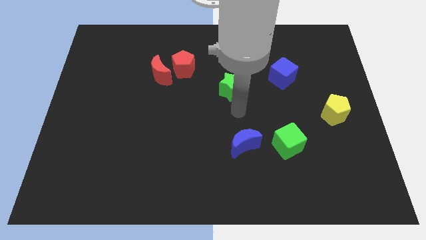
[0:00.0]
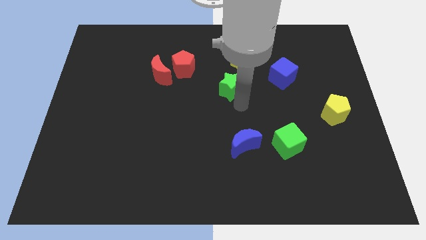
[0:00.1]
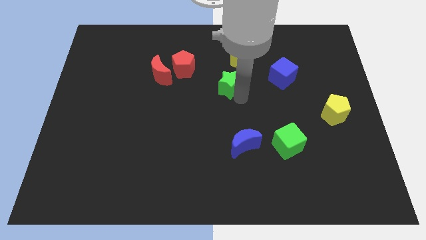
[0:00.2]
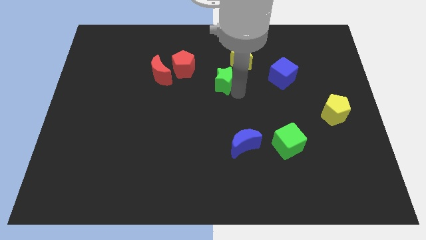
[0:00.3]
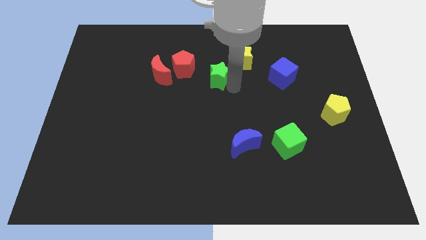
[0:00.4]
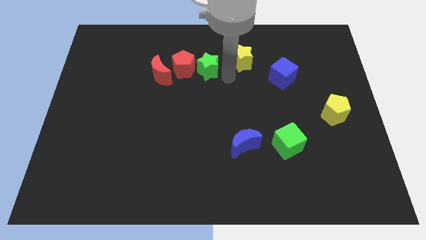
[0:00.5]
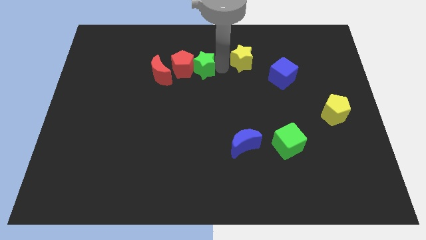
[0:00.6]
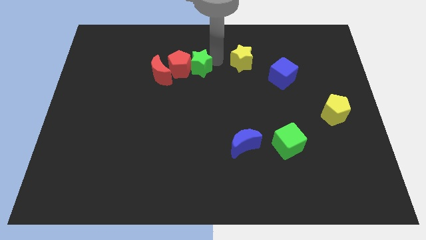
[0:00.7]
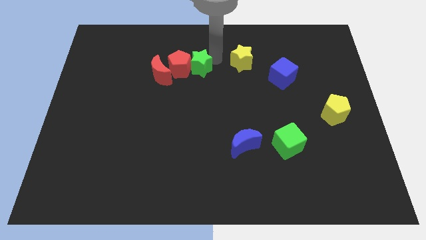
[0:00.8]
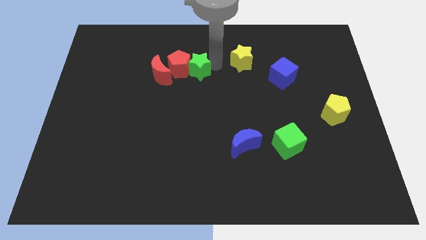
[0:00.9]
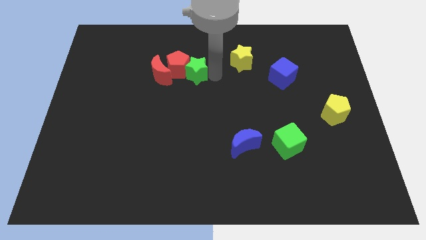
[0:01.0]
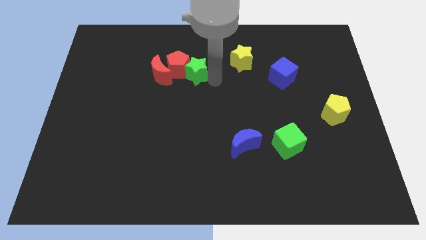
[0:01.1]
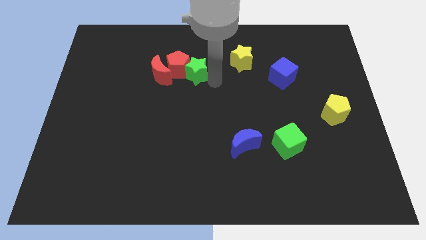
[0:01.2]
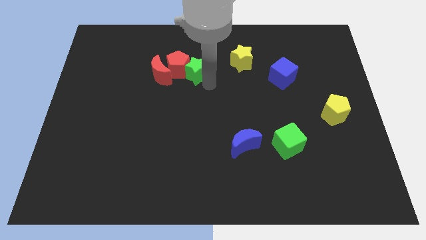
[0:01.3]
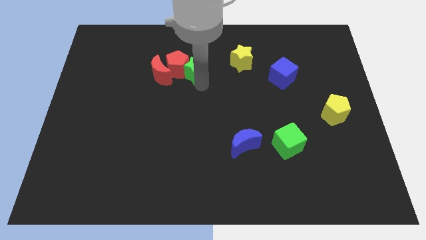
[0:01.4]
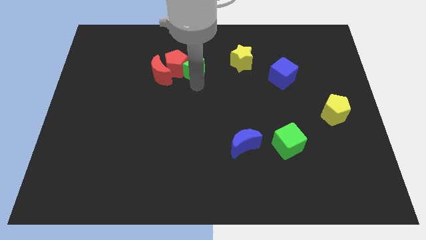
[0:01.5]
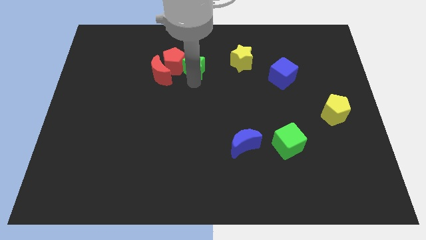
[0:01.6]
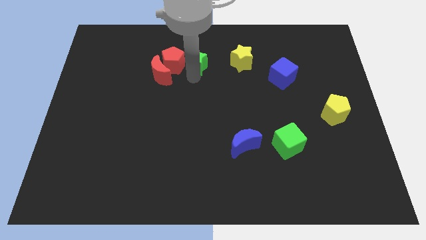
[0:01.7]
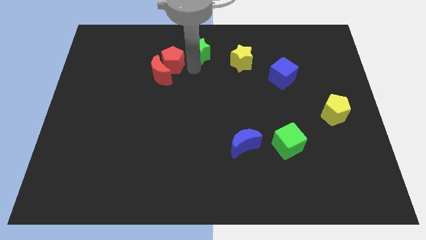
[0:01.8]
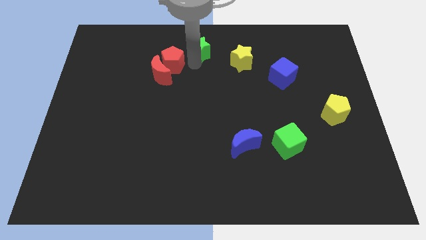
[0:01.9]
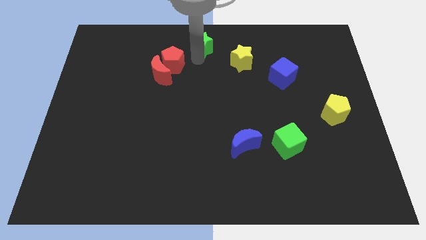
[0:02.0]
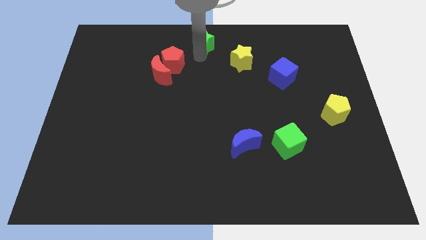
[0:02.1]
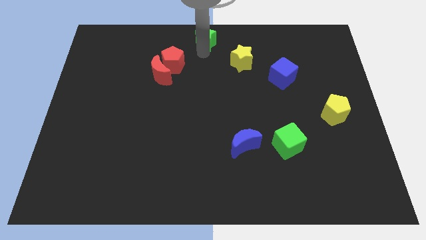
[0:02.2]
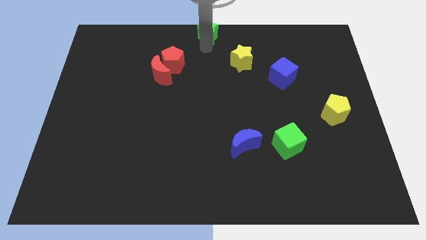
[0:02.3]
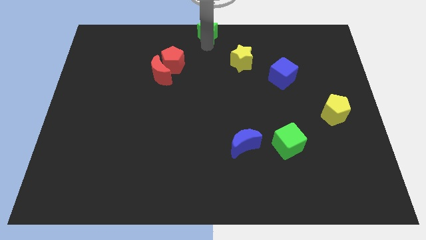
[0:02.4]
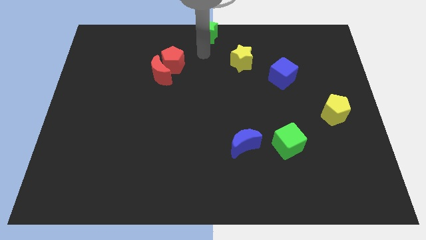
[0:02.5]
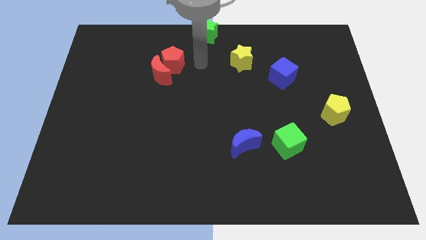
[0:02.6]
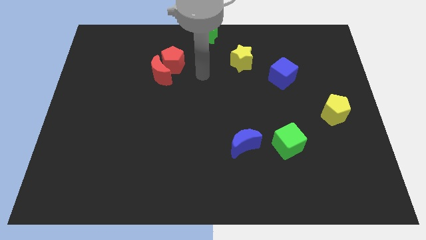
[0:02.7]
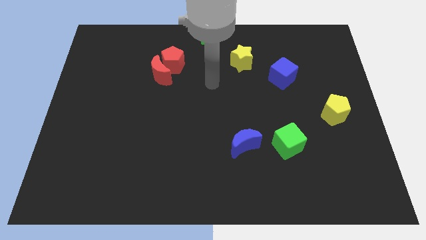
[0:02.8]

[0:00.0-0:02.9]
put the green star at the top center of the board

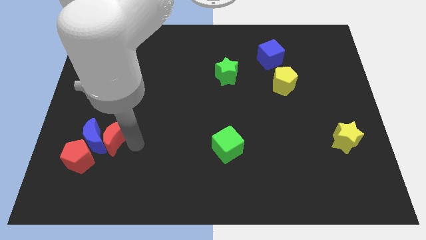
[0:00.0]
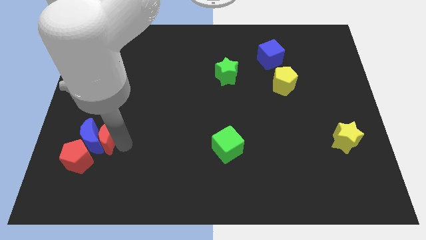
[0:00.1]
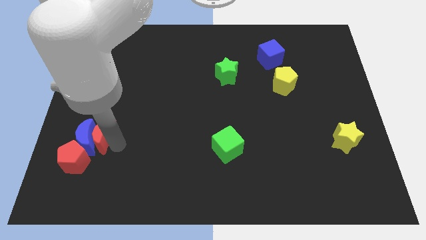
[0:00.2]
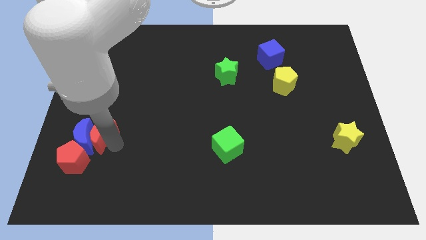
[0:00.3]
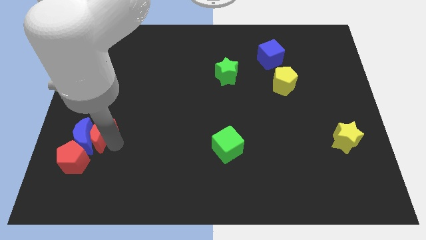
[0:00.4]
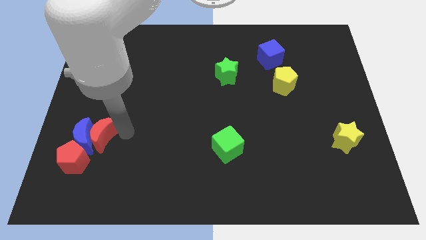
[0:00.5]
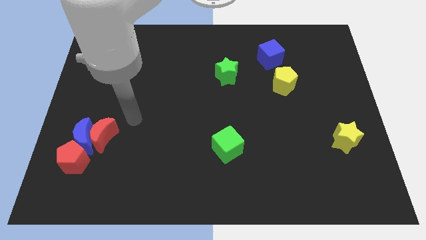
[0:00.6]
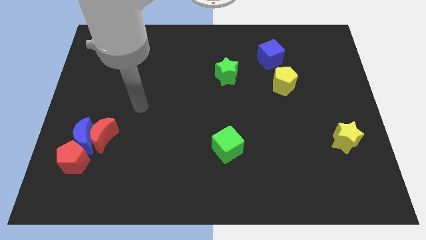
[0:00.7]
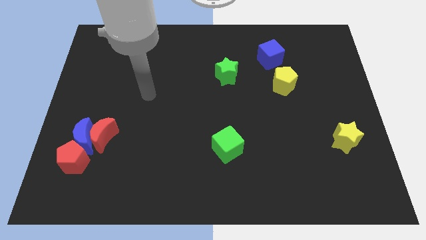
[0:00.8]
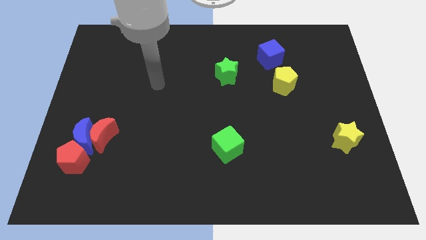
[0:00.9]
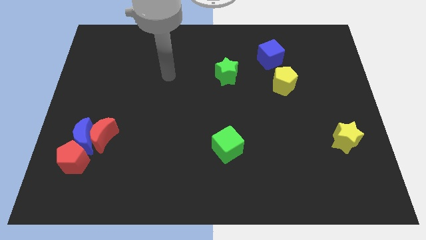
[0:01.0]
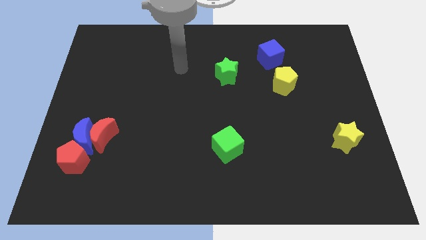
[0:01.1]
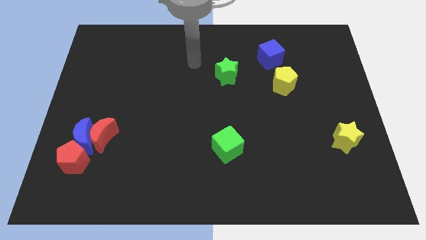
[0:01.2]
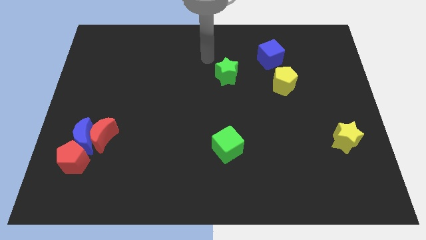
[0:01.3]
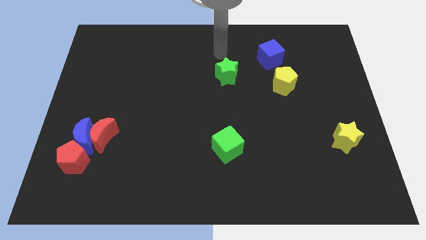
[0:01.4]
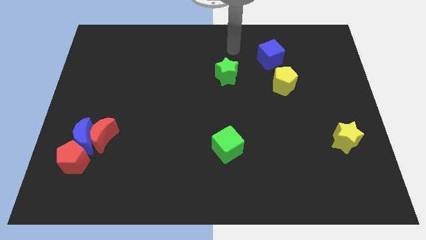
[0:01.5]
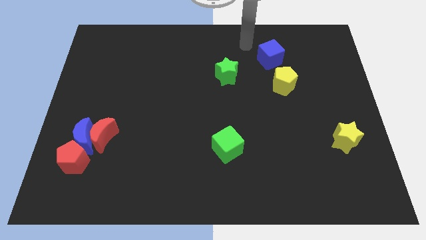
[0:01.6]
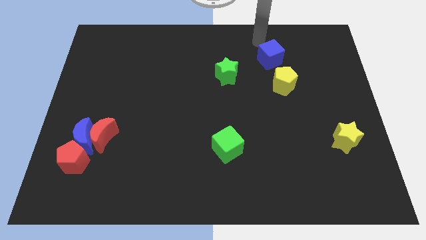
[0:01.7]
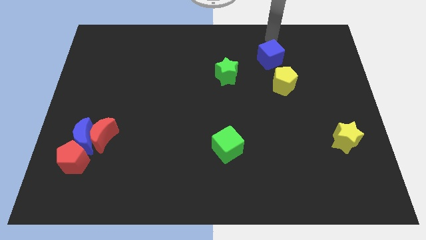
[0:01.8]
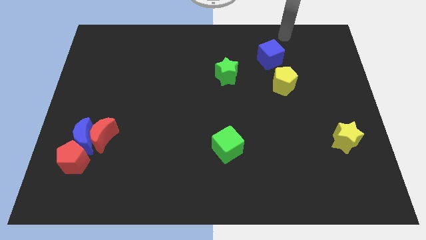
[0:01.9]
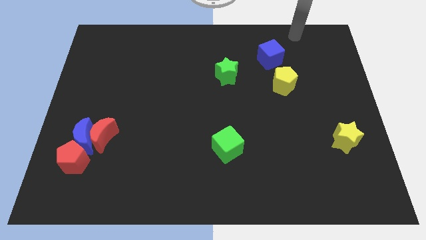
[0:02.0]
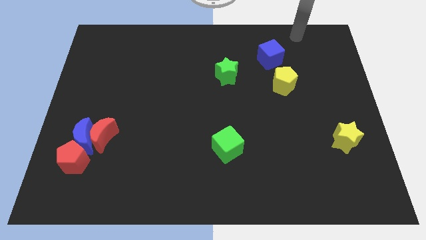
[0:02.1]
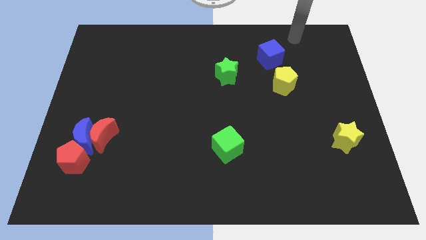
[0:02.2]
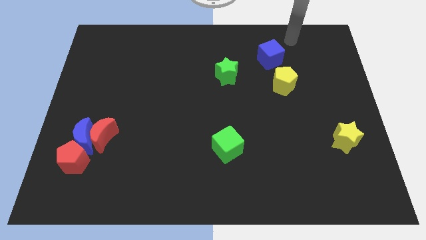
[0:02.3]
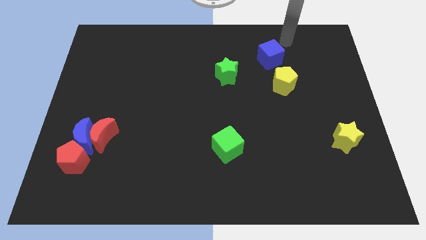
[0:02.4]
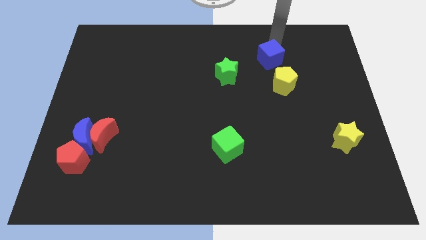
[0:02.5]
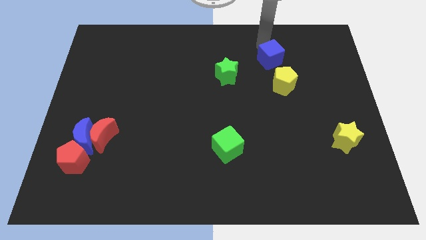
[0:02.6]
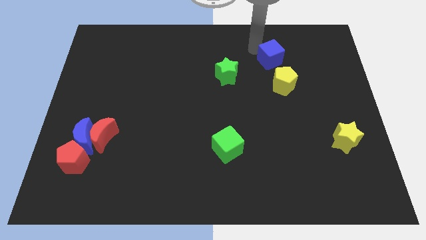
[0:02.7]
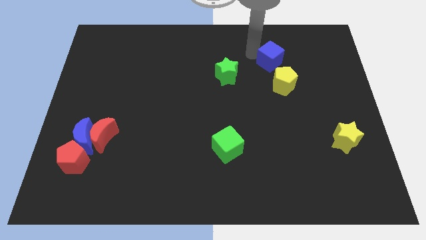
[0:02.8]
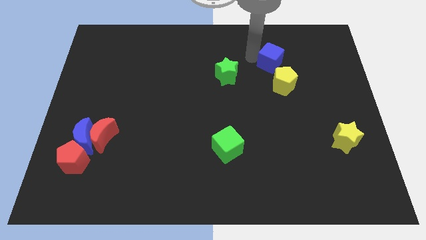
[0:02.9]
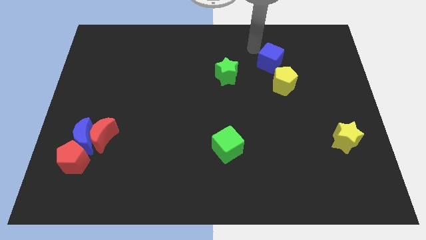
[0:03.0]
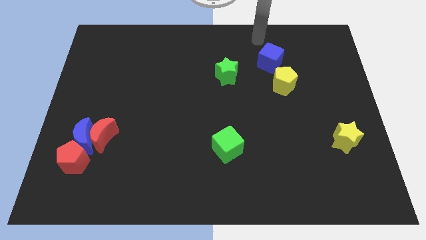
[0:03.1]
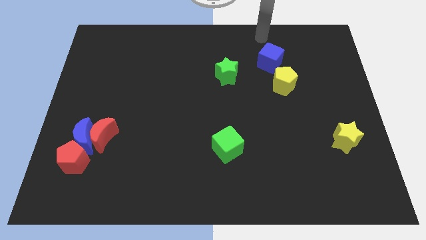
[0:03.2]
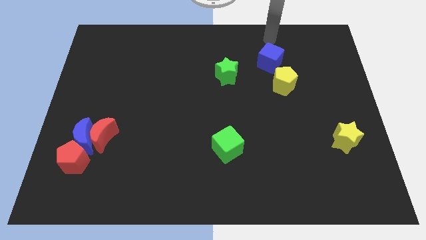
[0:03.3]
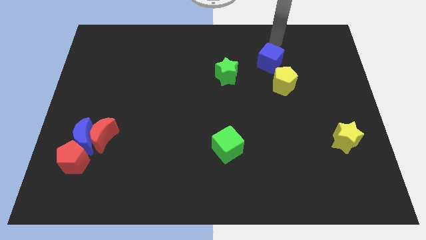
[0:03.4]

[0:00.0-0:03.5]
push a group of blocks to the left side of the board

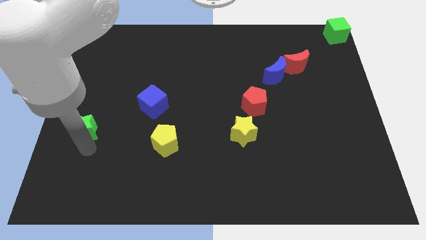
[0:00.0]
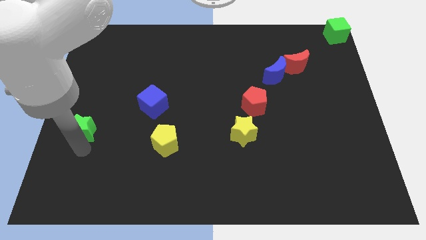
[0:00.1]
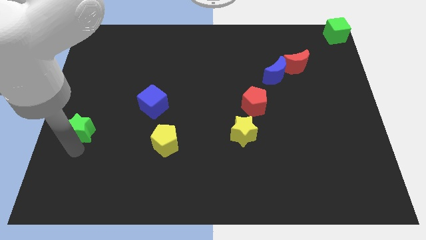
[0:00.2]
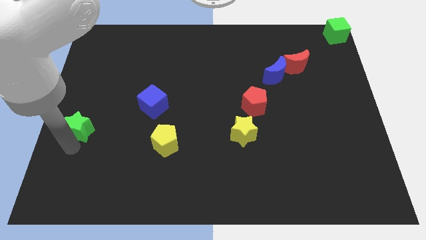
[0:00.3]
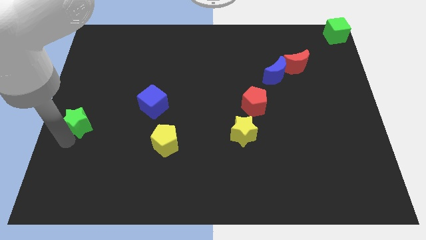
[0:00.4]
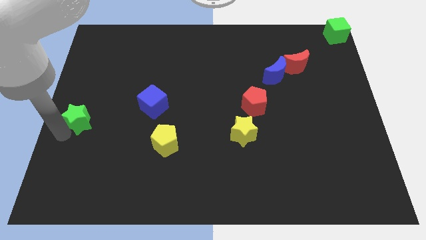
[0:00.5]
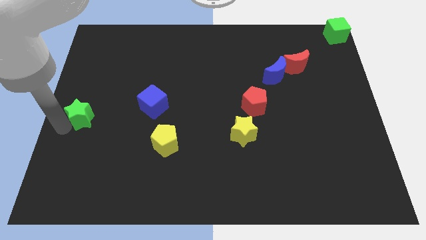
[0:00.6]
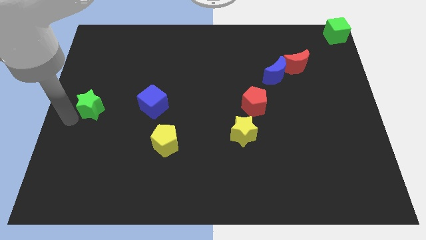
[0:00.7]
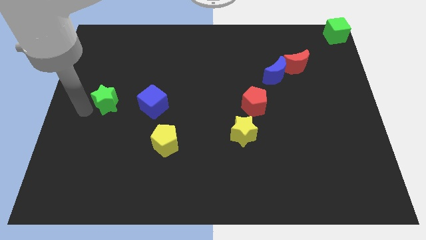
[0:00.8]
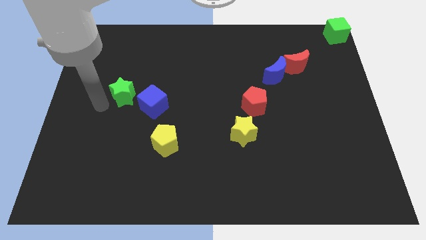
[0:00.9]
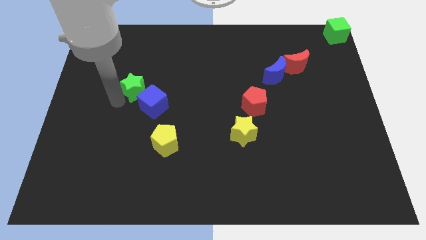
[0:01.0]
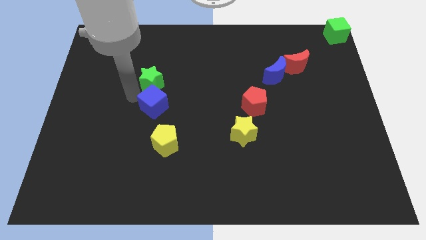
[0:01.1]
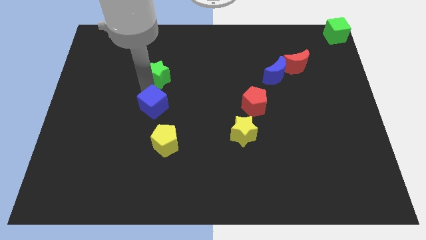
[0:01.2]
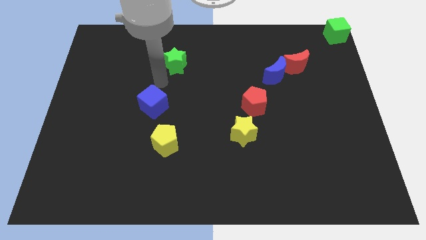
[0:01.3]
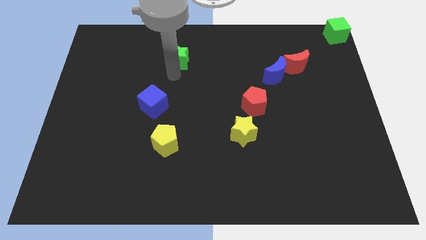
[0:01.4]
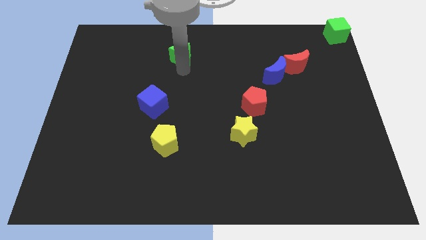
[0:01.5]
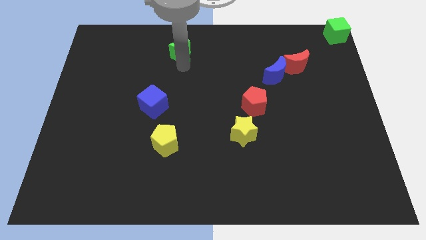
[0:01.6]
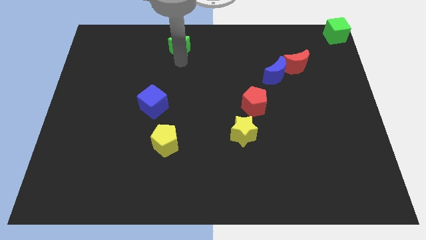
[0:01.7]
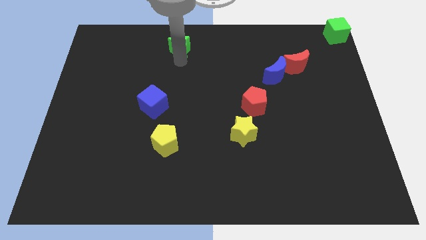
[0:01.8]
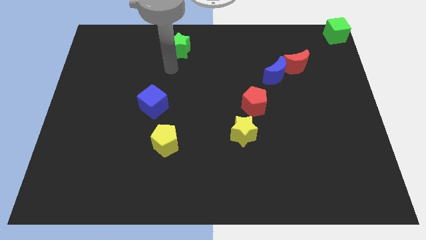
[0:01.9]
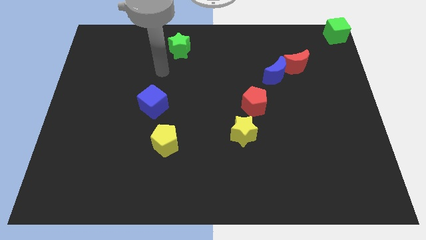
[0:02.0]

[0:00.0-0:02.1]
move the green star to the top center of the board

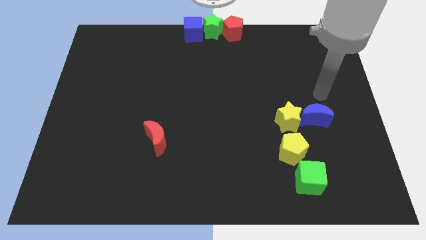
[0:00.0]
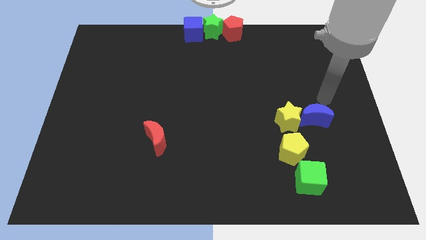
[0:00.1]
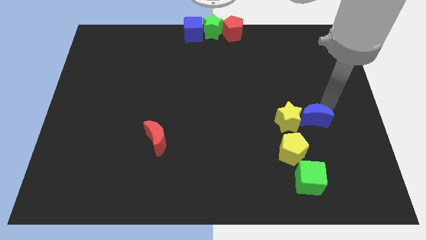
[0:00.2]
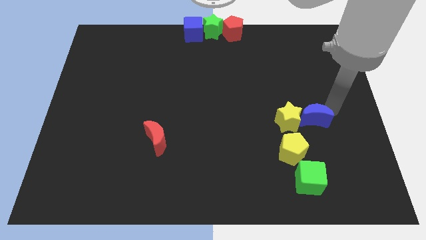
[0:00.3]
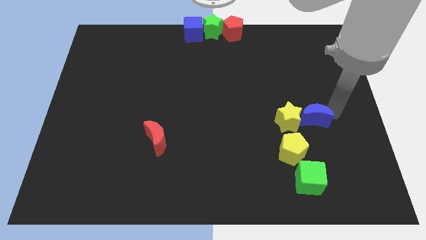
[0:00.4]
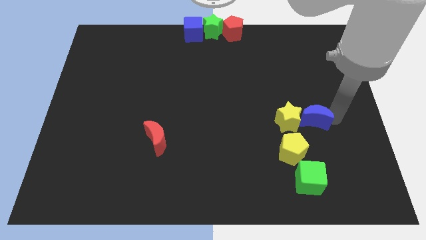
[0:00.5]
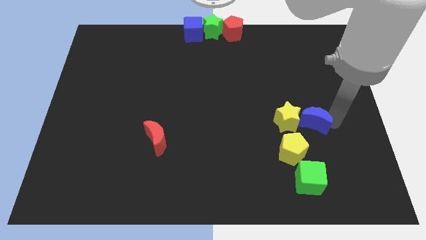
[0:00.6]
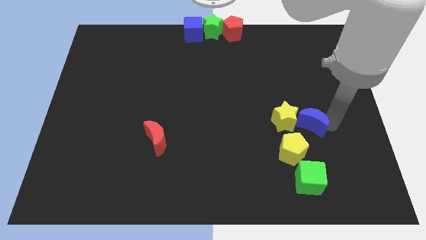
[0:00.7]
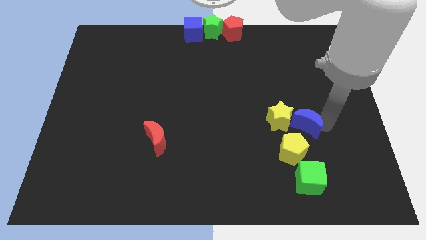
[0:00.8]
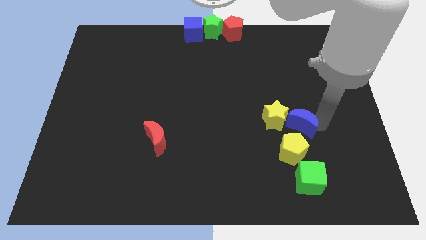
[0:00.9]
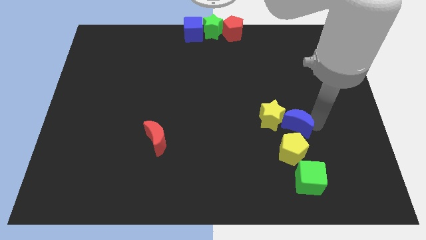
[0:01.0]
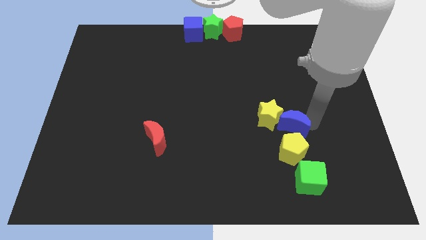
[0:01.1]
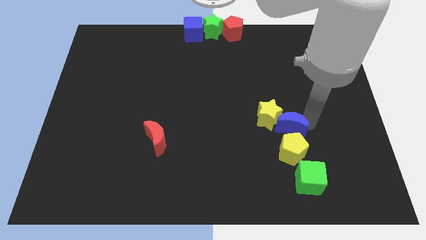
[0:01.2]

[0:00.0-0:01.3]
push the yellow star and blue moon towards the center of the board
